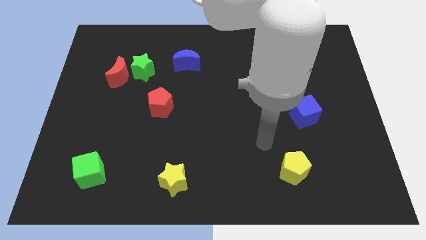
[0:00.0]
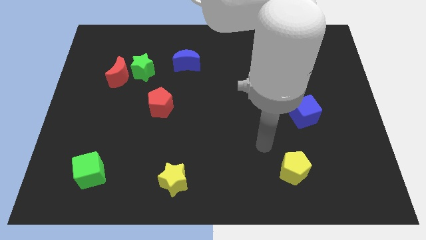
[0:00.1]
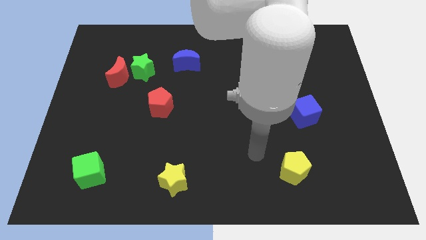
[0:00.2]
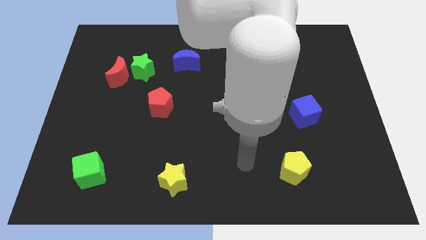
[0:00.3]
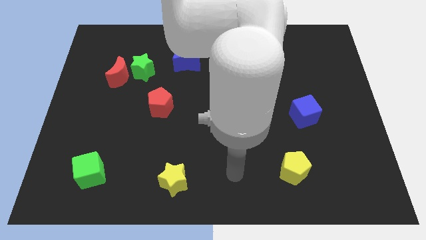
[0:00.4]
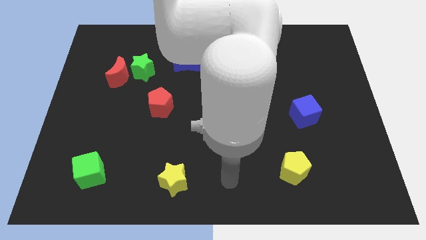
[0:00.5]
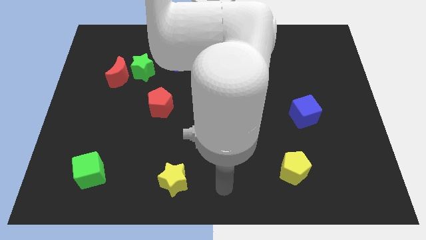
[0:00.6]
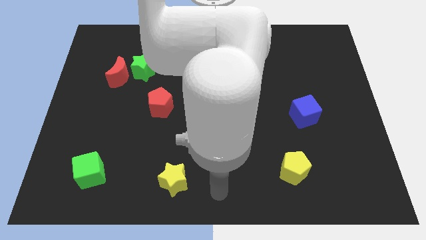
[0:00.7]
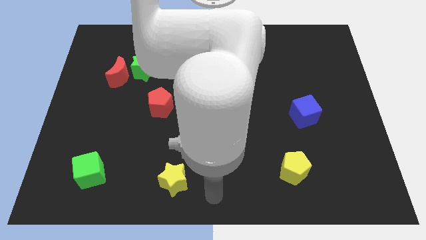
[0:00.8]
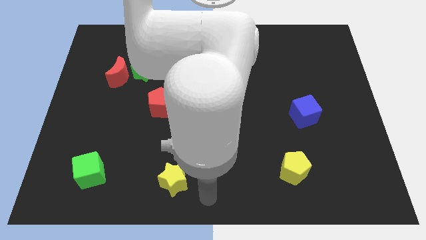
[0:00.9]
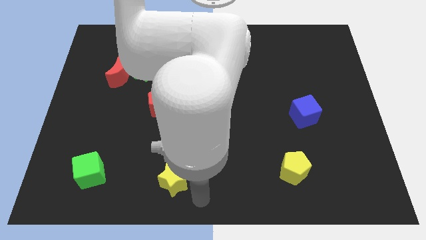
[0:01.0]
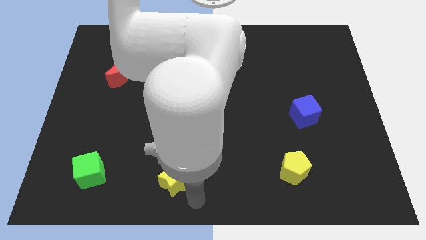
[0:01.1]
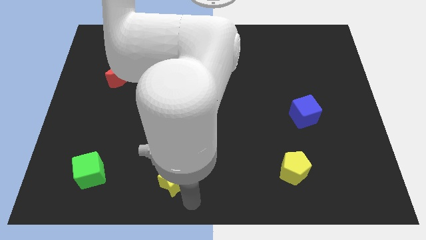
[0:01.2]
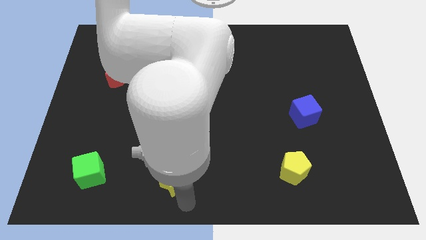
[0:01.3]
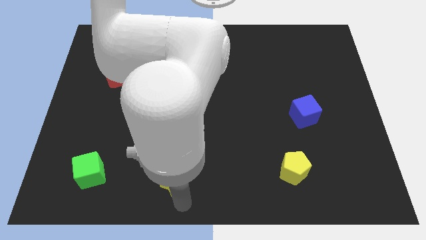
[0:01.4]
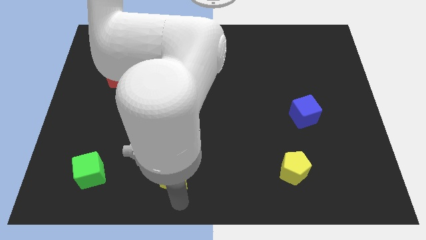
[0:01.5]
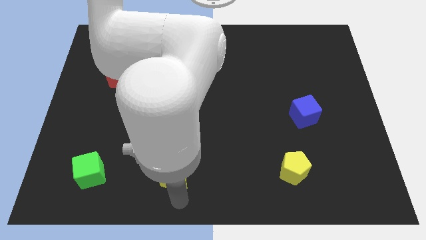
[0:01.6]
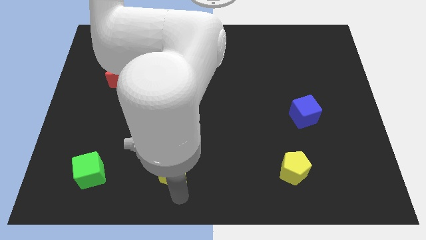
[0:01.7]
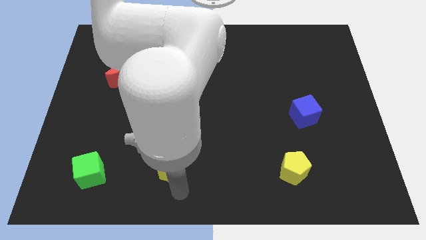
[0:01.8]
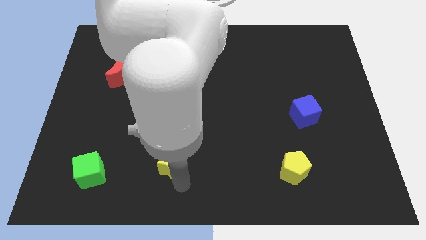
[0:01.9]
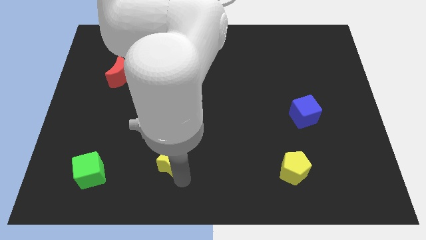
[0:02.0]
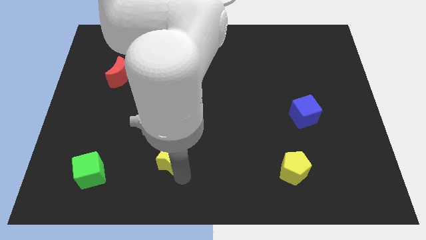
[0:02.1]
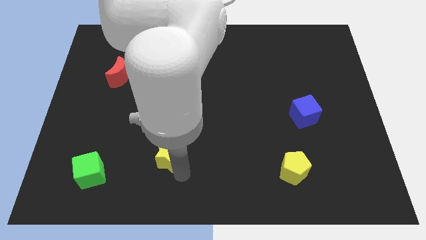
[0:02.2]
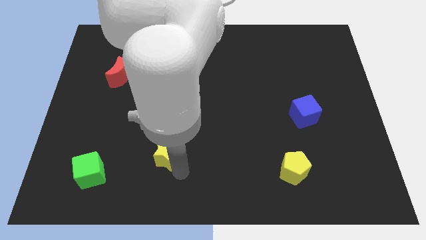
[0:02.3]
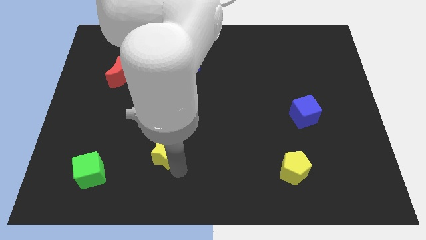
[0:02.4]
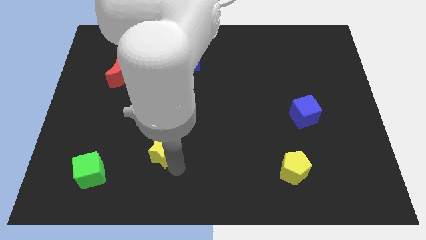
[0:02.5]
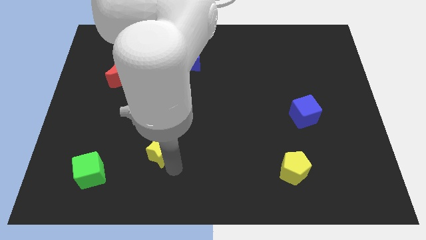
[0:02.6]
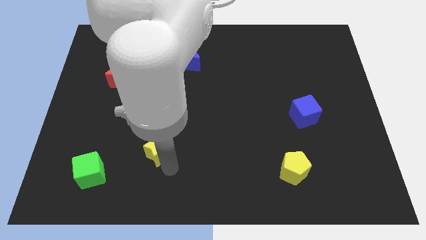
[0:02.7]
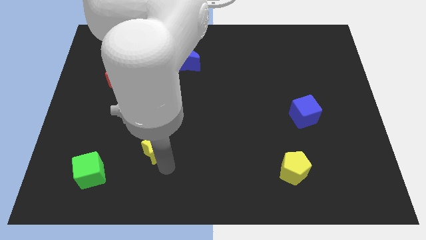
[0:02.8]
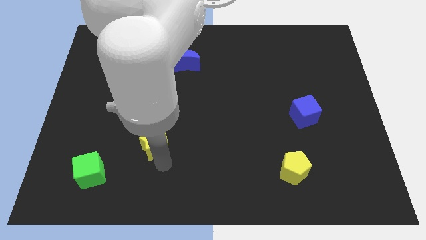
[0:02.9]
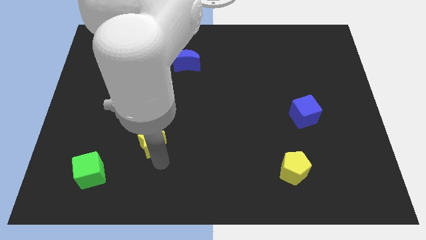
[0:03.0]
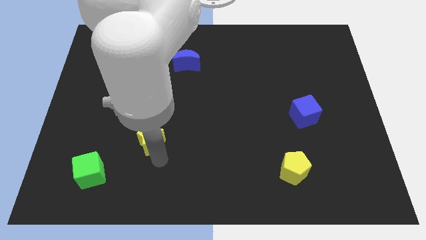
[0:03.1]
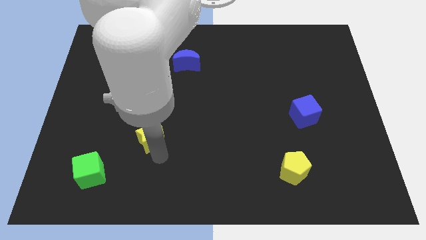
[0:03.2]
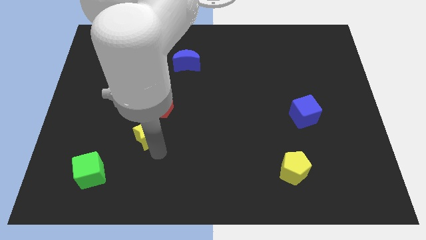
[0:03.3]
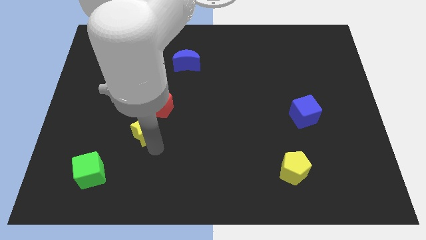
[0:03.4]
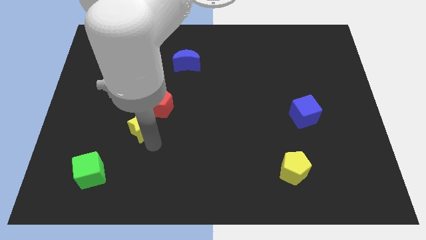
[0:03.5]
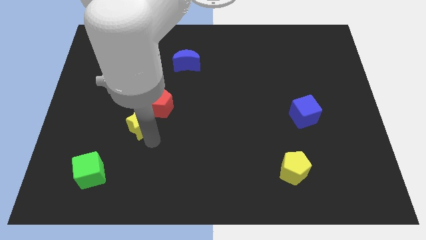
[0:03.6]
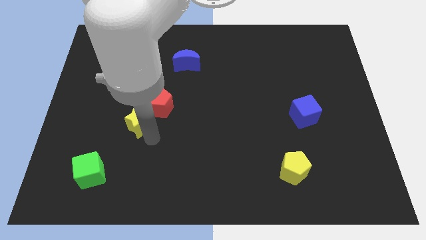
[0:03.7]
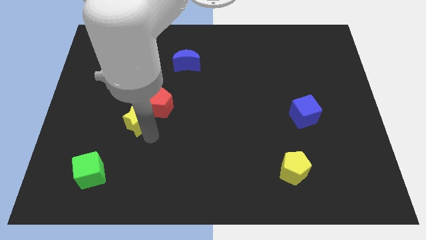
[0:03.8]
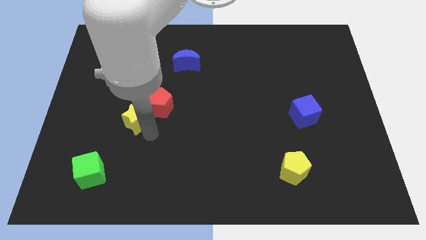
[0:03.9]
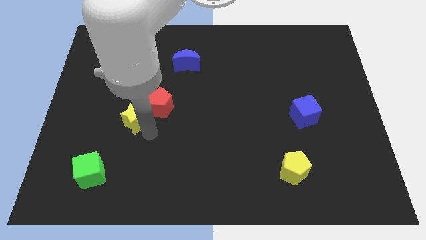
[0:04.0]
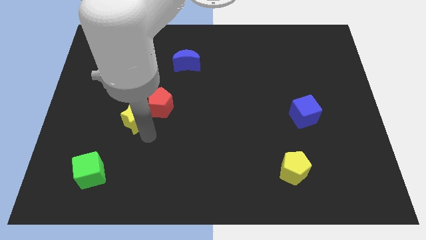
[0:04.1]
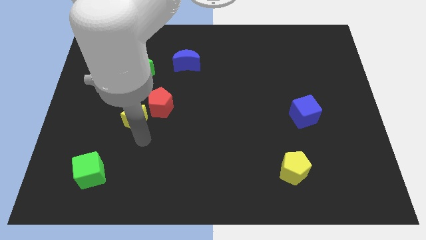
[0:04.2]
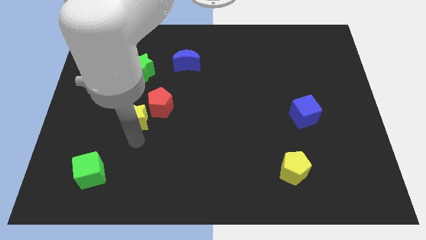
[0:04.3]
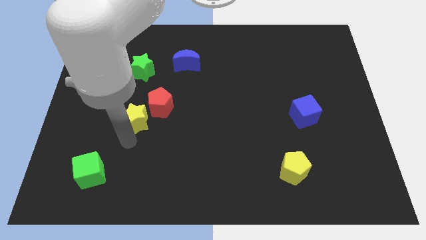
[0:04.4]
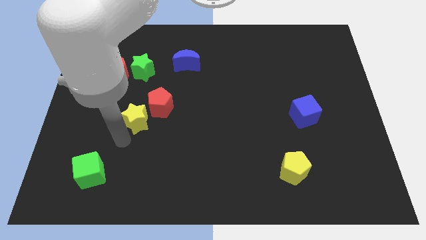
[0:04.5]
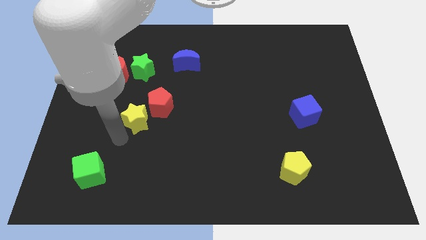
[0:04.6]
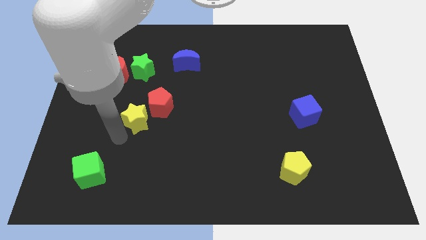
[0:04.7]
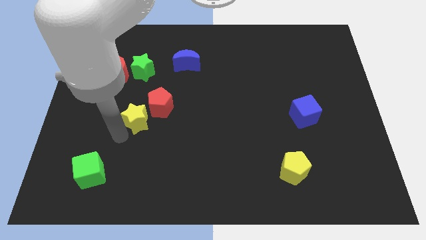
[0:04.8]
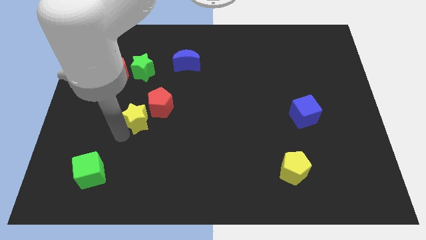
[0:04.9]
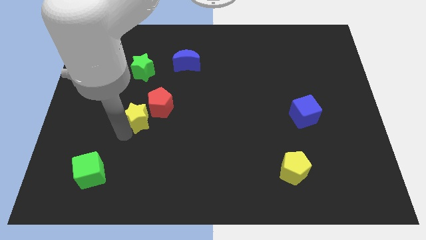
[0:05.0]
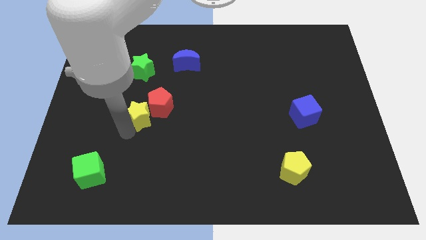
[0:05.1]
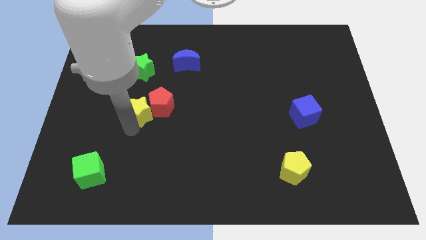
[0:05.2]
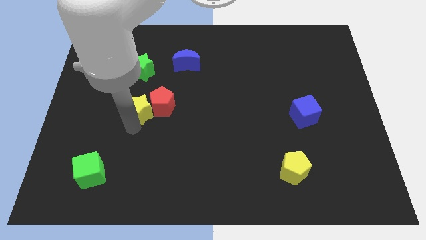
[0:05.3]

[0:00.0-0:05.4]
put the yellow star towards the red pentagon

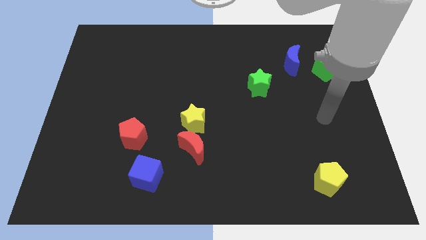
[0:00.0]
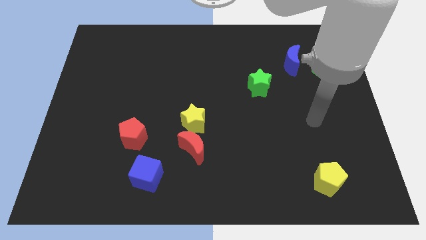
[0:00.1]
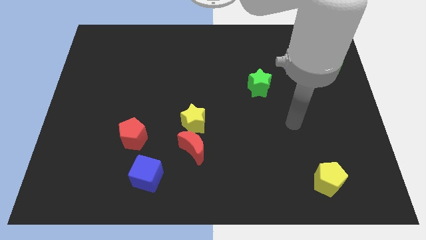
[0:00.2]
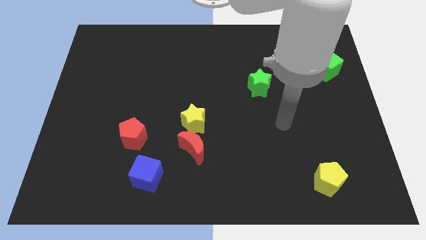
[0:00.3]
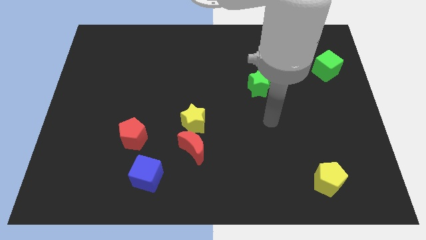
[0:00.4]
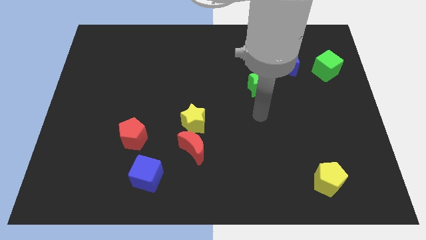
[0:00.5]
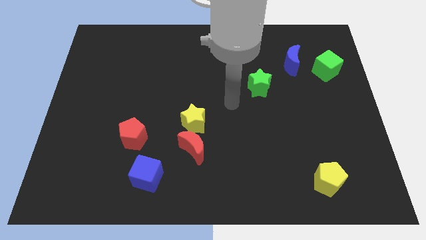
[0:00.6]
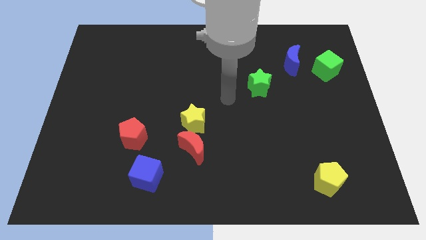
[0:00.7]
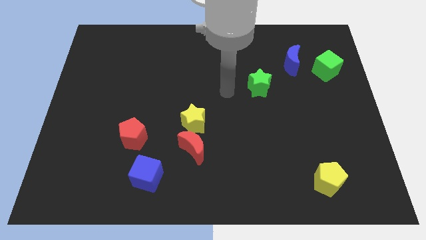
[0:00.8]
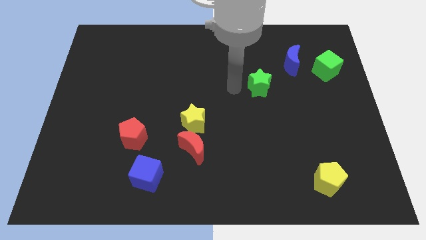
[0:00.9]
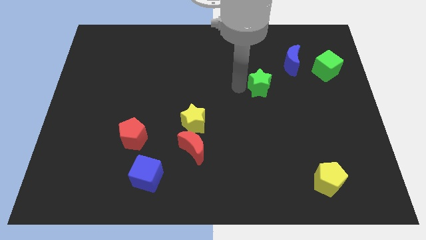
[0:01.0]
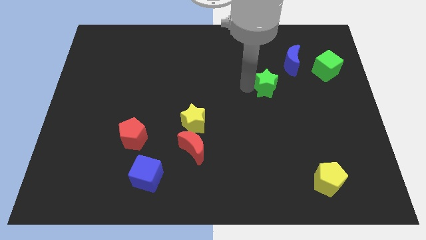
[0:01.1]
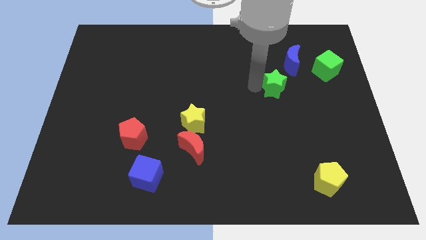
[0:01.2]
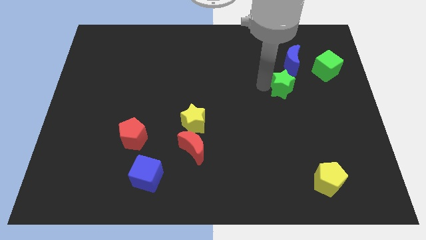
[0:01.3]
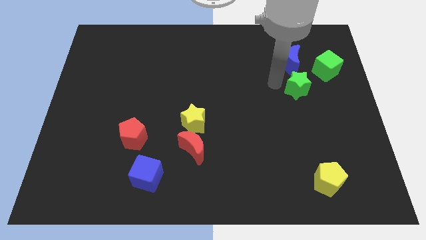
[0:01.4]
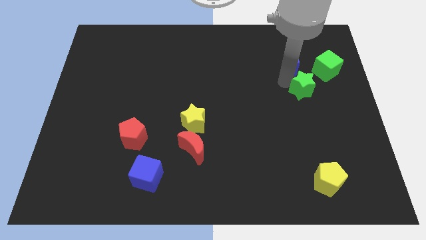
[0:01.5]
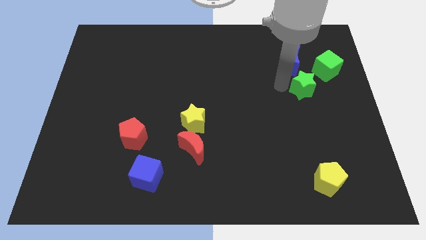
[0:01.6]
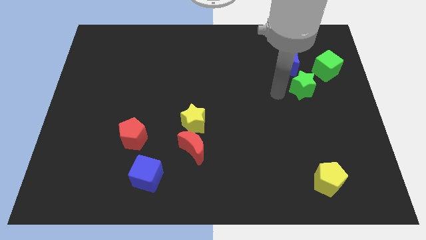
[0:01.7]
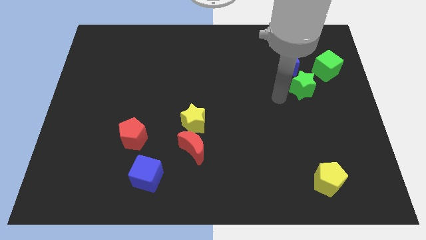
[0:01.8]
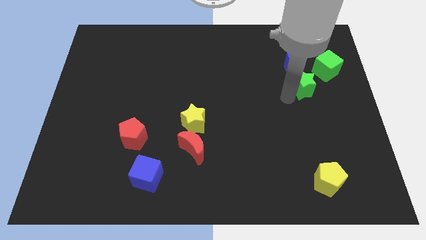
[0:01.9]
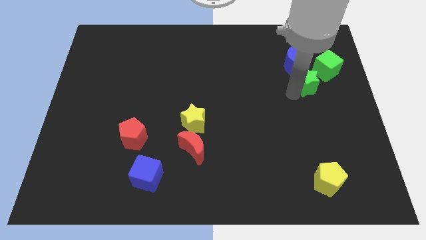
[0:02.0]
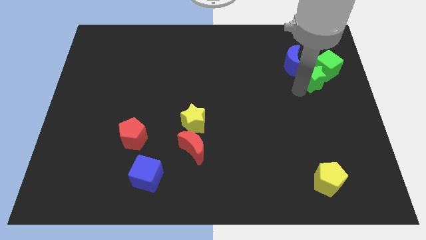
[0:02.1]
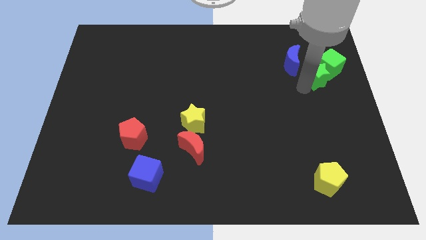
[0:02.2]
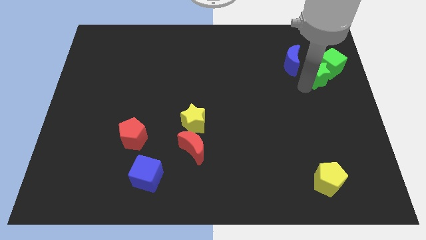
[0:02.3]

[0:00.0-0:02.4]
put the green star close to the green cube

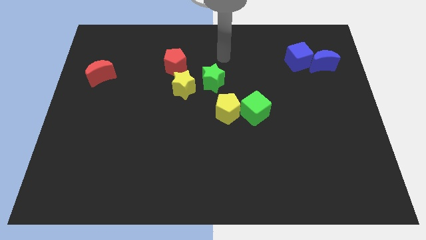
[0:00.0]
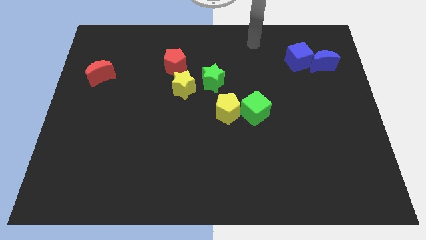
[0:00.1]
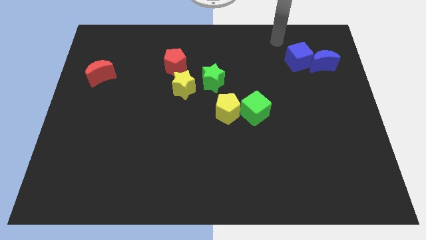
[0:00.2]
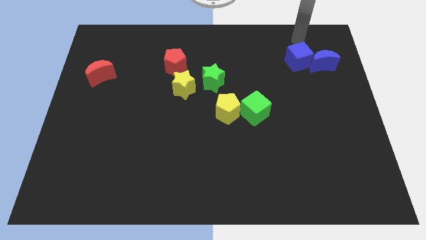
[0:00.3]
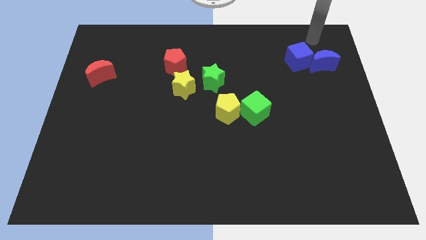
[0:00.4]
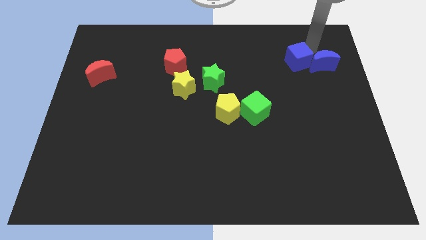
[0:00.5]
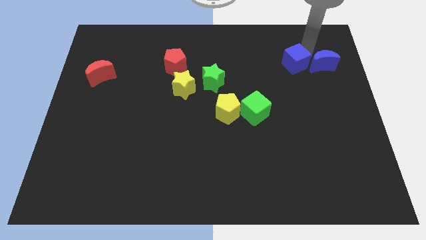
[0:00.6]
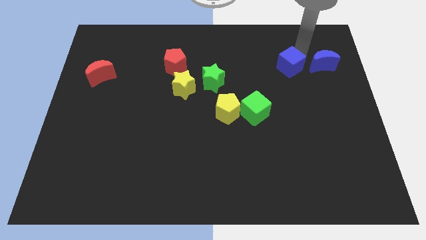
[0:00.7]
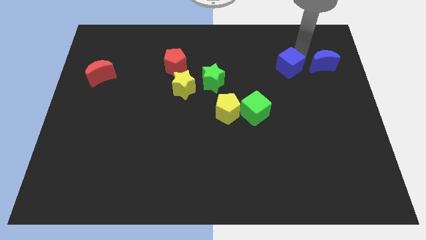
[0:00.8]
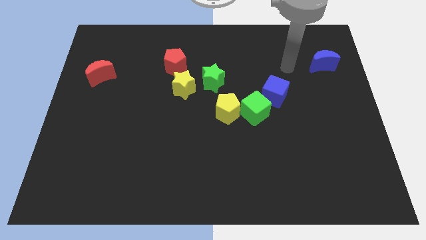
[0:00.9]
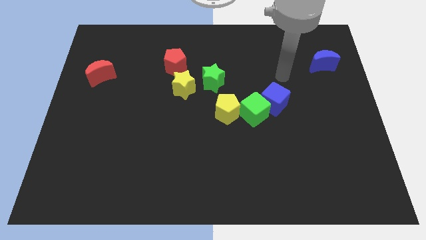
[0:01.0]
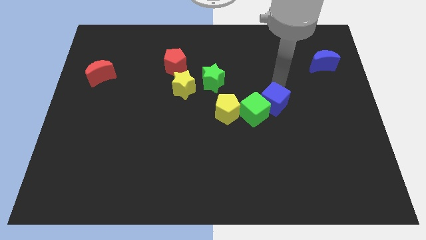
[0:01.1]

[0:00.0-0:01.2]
push the blue cube to the green cube
